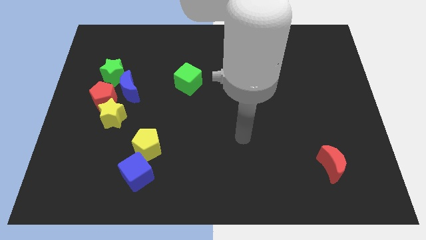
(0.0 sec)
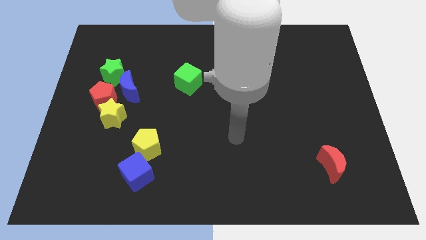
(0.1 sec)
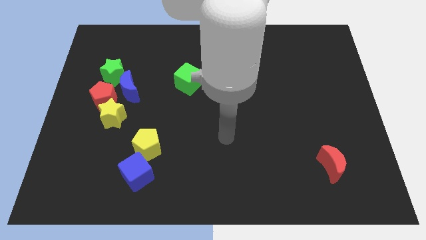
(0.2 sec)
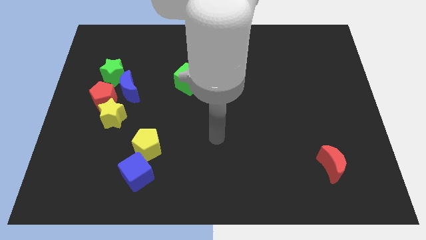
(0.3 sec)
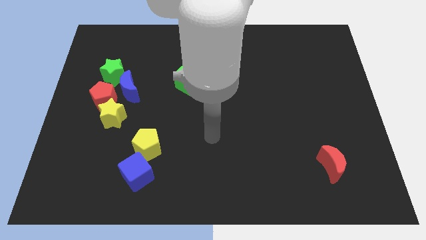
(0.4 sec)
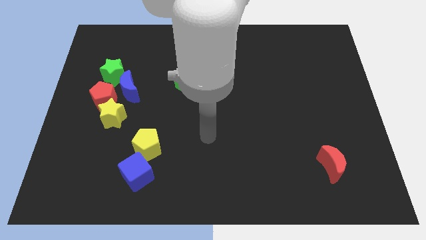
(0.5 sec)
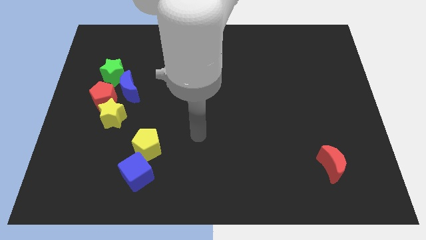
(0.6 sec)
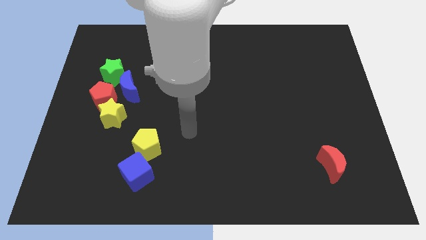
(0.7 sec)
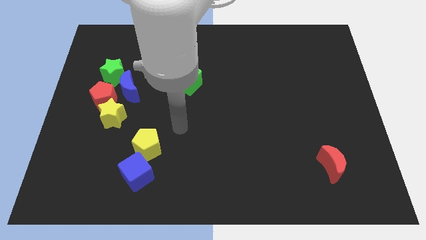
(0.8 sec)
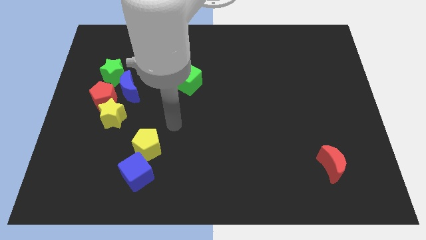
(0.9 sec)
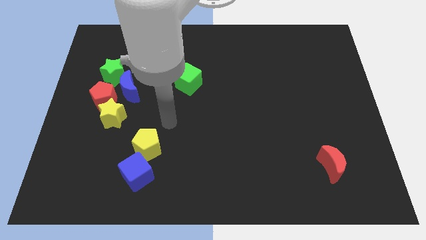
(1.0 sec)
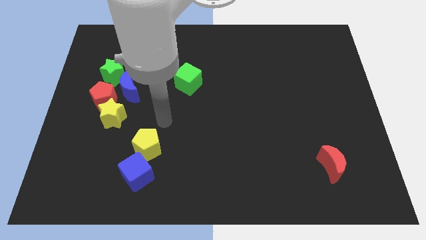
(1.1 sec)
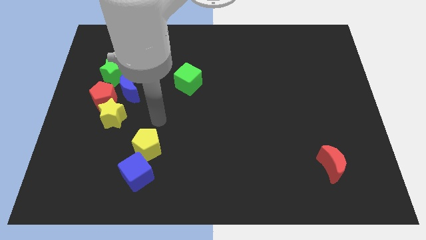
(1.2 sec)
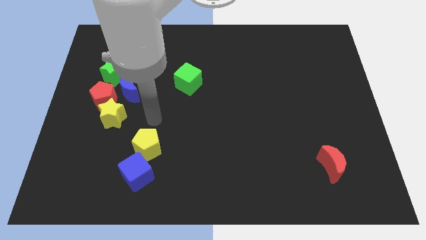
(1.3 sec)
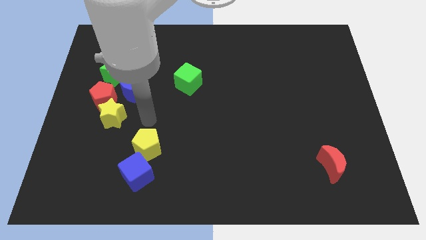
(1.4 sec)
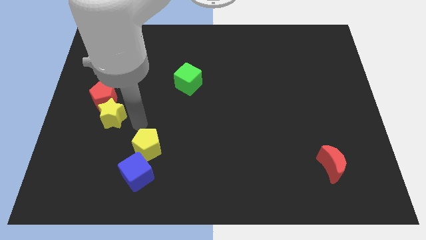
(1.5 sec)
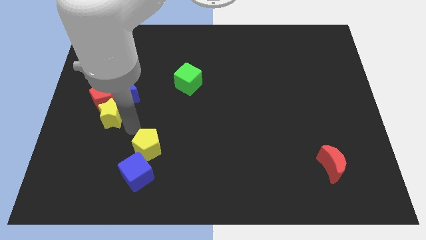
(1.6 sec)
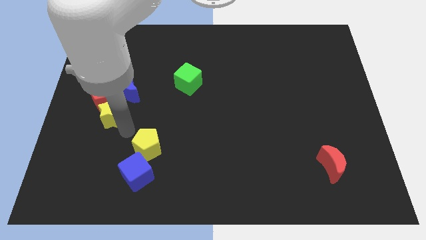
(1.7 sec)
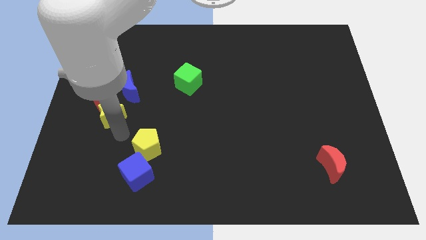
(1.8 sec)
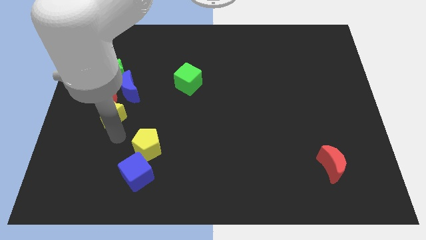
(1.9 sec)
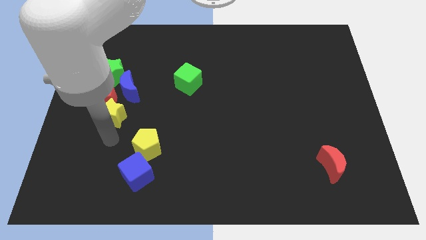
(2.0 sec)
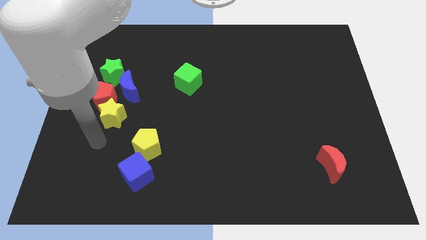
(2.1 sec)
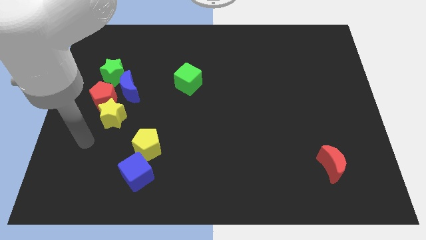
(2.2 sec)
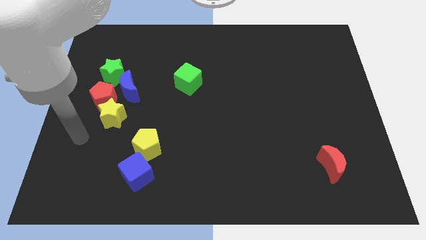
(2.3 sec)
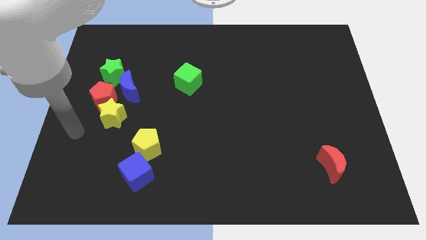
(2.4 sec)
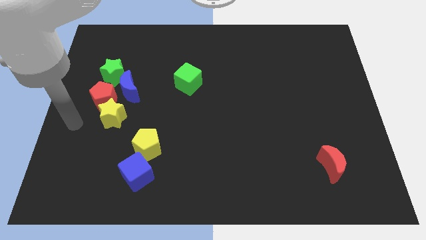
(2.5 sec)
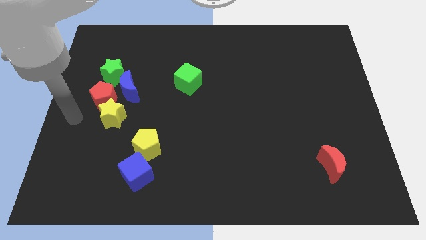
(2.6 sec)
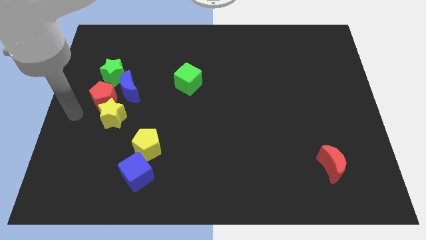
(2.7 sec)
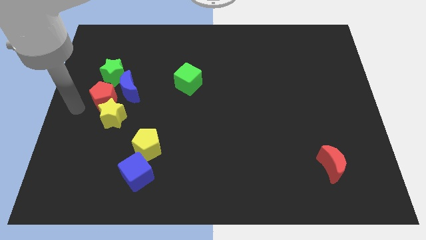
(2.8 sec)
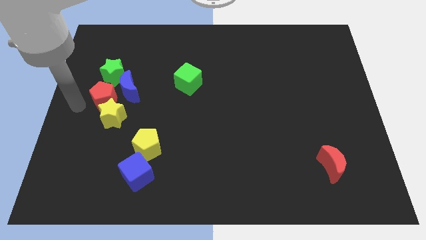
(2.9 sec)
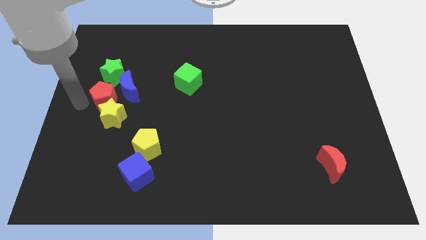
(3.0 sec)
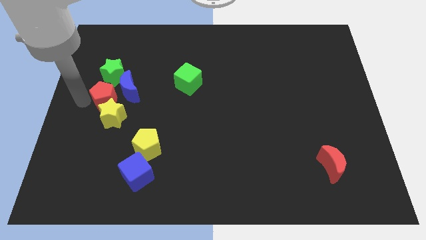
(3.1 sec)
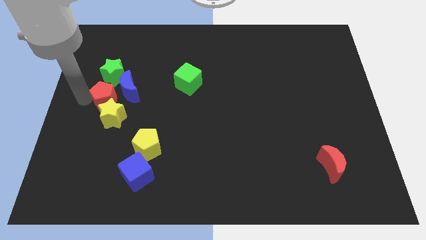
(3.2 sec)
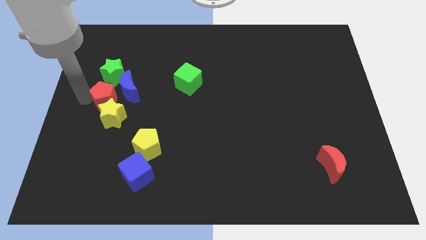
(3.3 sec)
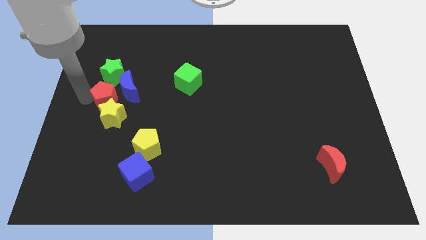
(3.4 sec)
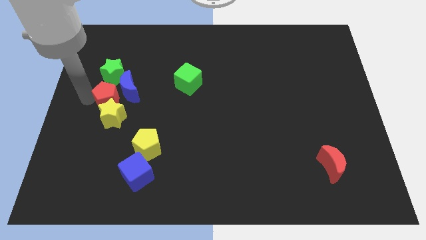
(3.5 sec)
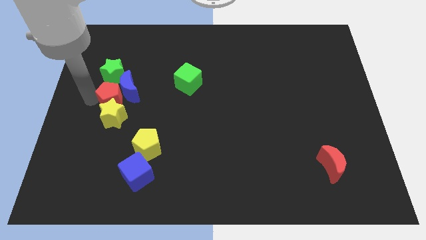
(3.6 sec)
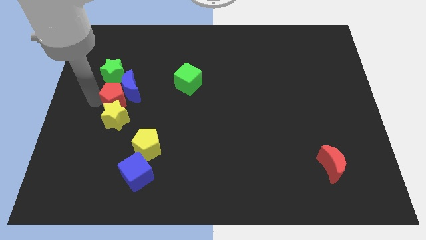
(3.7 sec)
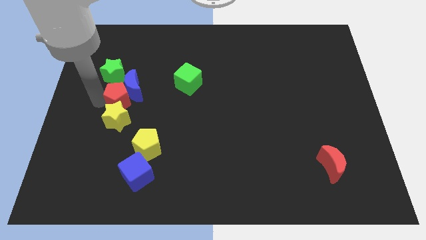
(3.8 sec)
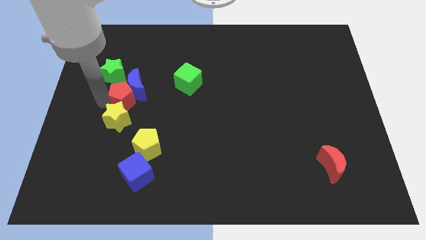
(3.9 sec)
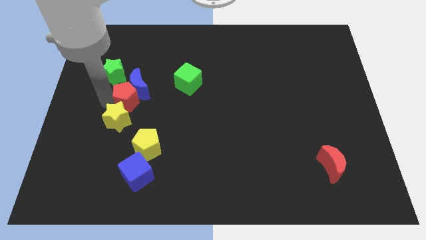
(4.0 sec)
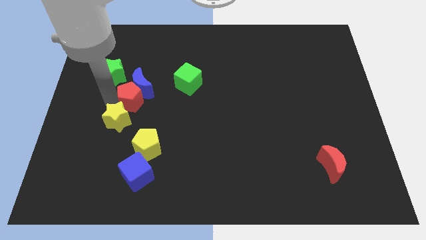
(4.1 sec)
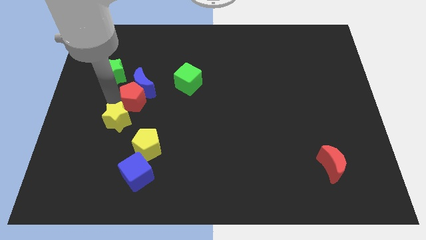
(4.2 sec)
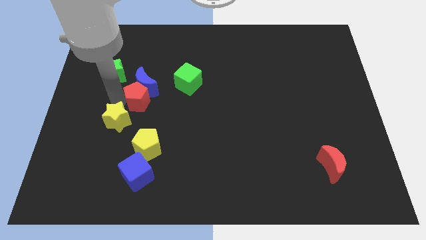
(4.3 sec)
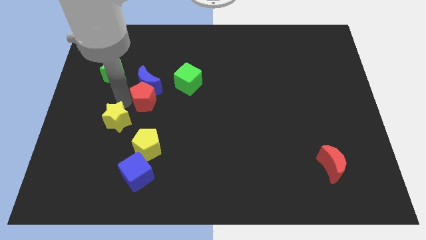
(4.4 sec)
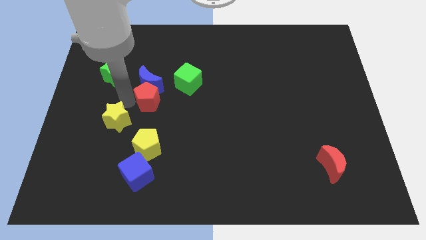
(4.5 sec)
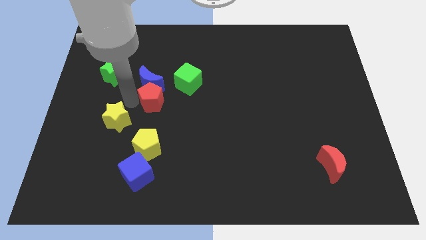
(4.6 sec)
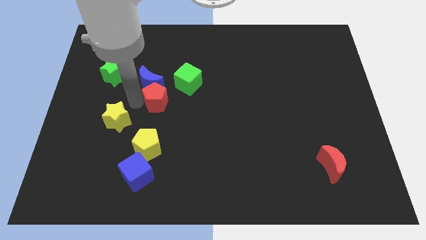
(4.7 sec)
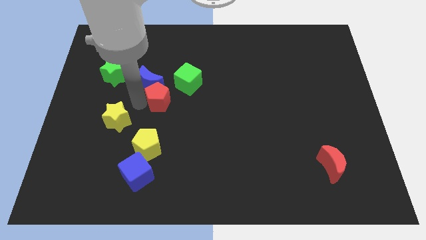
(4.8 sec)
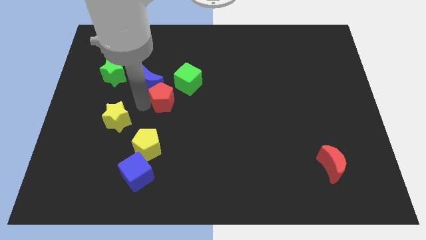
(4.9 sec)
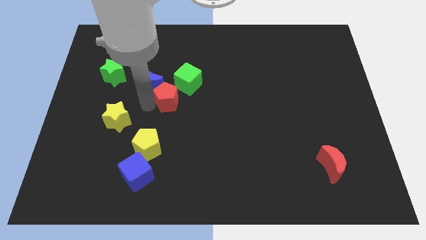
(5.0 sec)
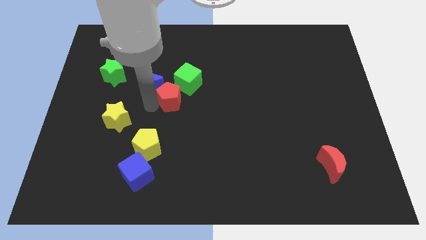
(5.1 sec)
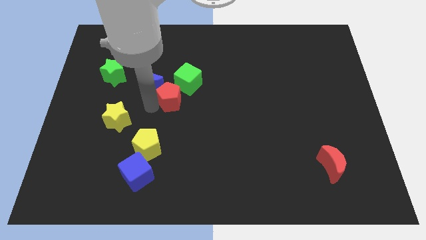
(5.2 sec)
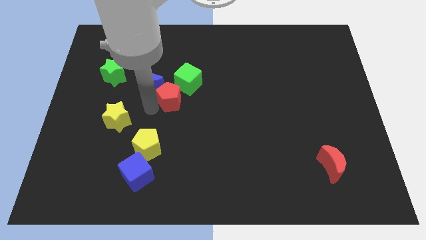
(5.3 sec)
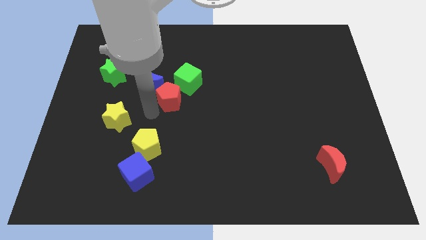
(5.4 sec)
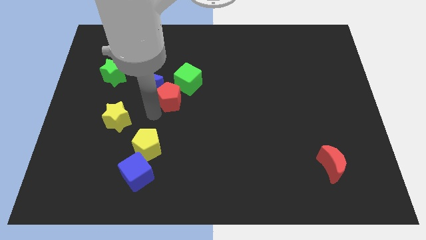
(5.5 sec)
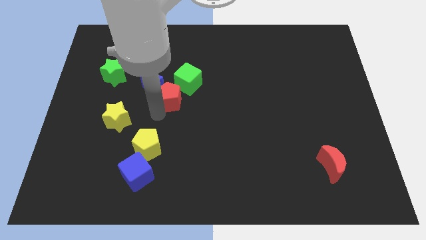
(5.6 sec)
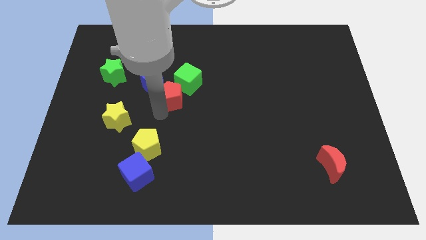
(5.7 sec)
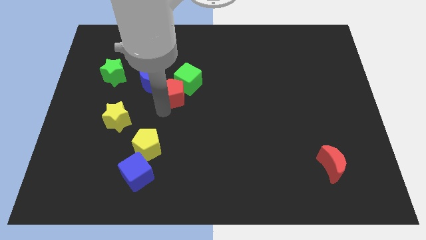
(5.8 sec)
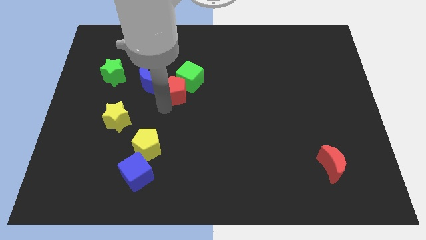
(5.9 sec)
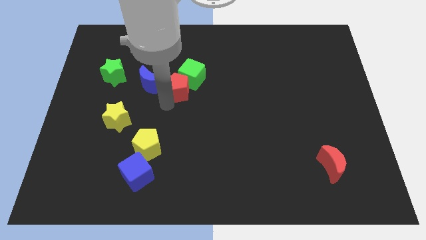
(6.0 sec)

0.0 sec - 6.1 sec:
push the red pentagon close to the green cube

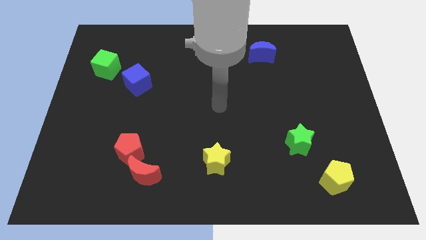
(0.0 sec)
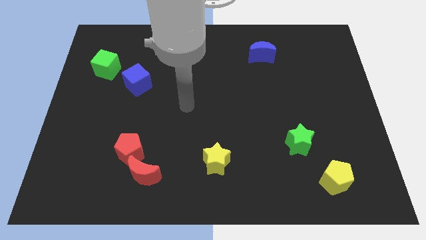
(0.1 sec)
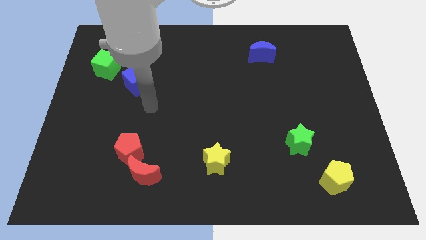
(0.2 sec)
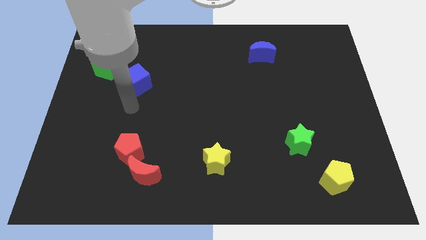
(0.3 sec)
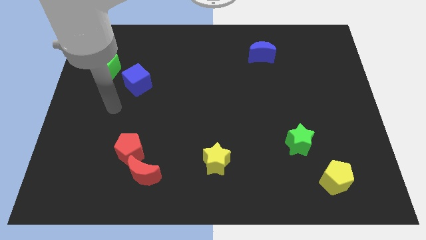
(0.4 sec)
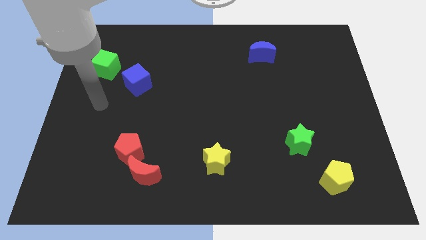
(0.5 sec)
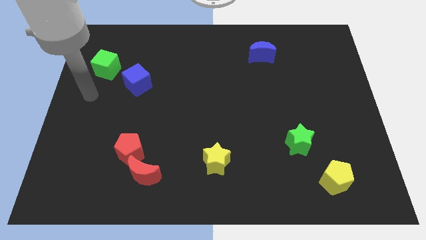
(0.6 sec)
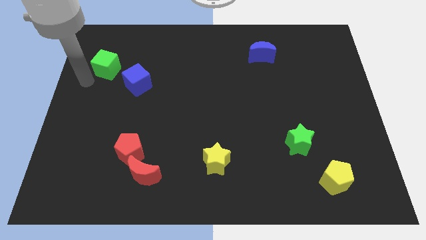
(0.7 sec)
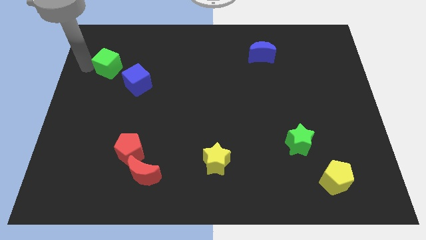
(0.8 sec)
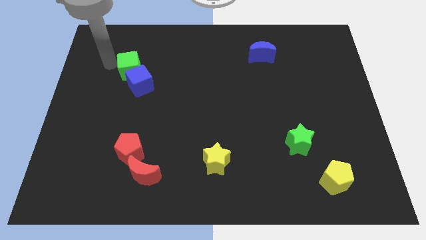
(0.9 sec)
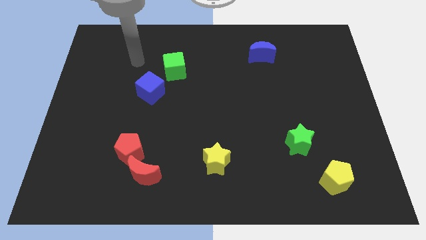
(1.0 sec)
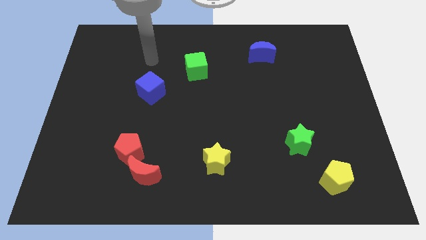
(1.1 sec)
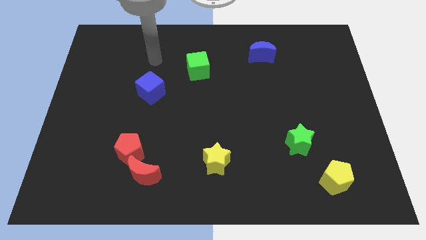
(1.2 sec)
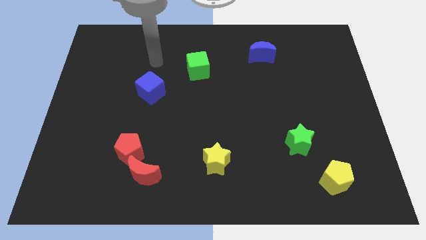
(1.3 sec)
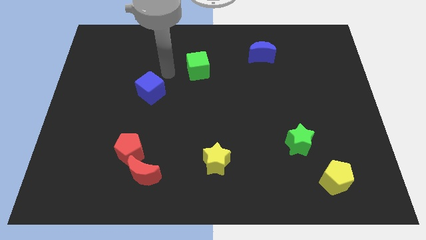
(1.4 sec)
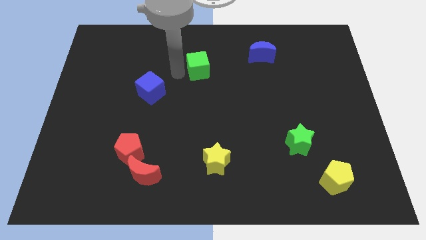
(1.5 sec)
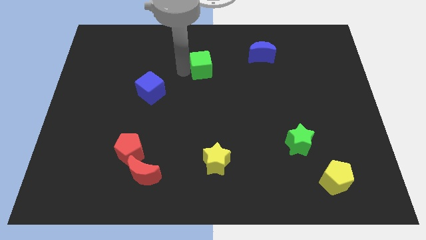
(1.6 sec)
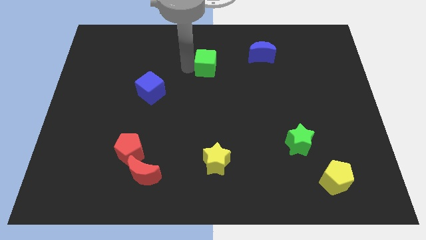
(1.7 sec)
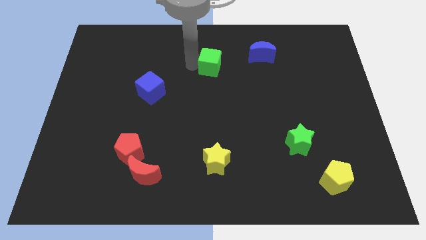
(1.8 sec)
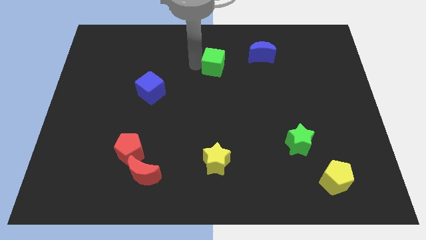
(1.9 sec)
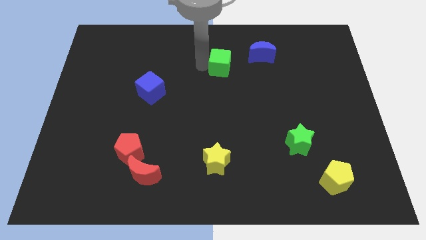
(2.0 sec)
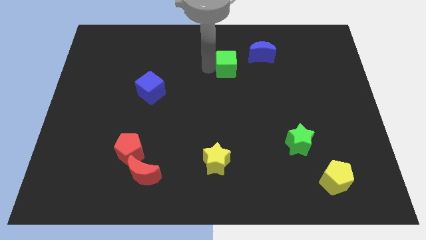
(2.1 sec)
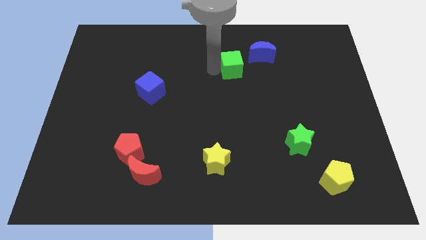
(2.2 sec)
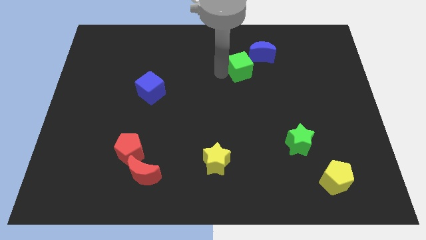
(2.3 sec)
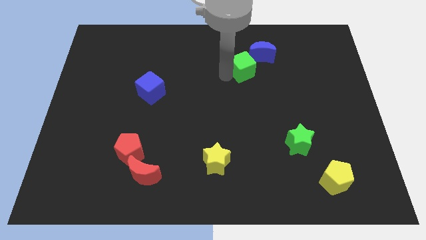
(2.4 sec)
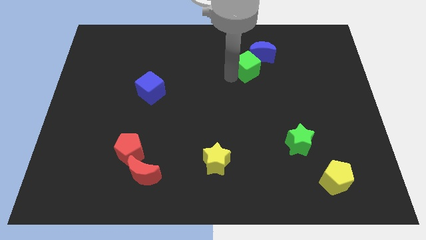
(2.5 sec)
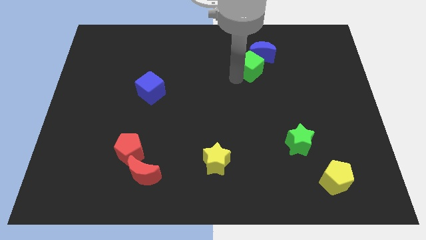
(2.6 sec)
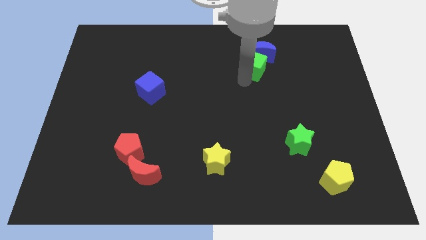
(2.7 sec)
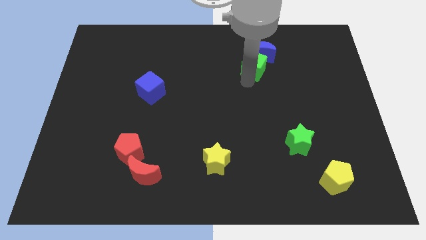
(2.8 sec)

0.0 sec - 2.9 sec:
push the green cube to the blue moon
